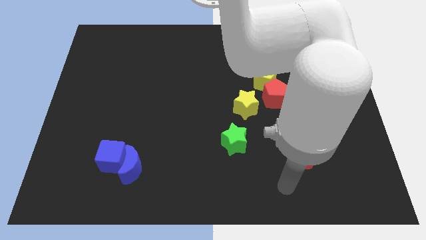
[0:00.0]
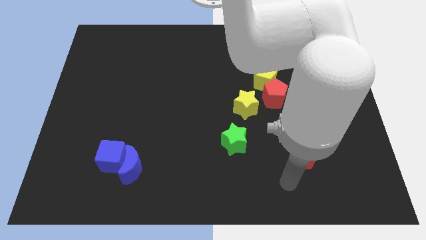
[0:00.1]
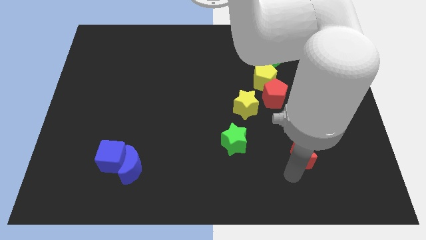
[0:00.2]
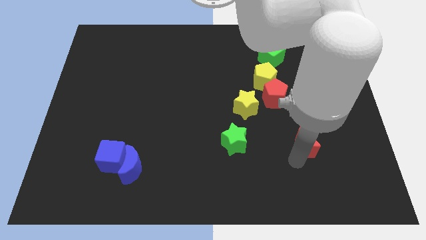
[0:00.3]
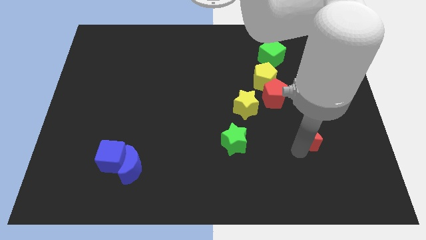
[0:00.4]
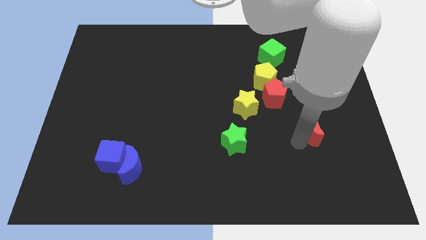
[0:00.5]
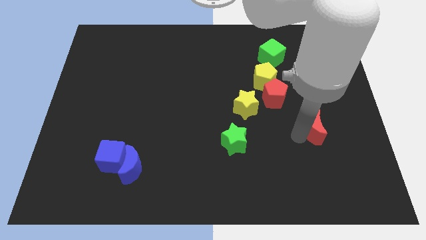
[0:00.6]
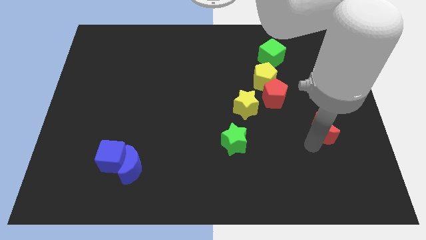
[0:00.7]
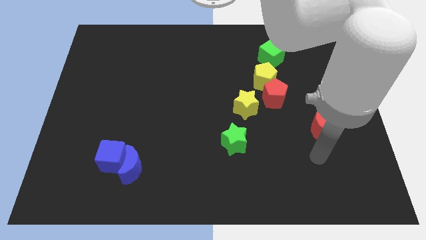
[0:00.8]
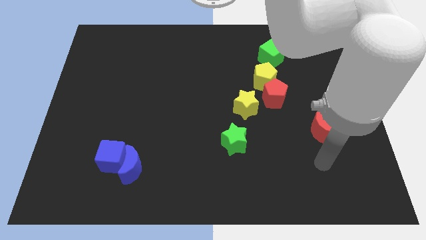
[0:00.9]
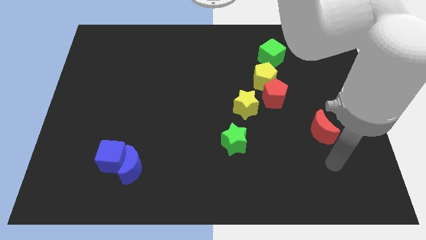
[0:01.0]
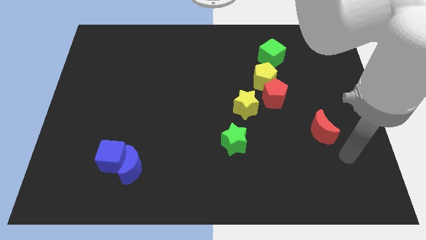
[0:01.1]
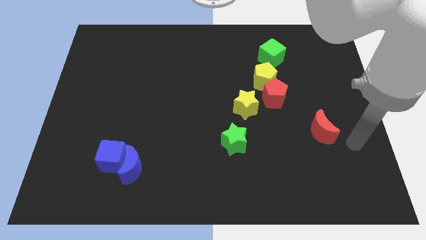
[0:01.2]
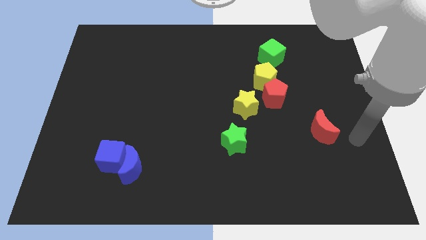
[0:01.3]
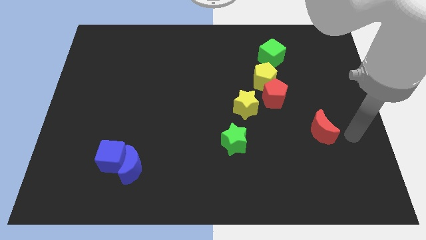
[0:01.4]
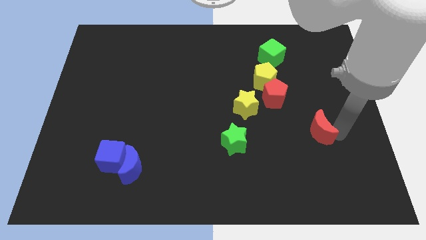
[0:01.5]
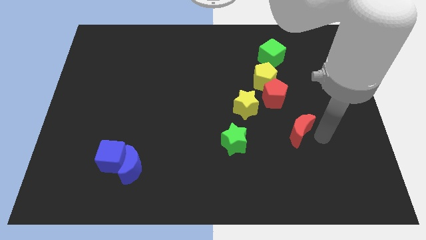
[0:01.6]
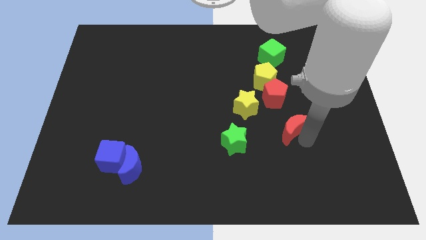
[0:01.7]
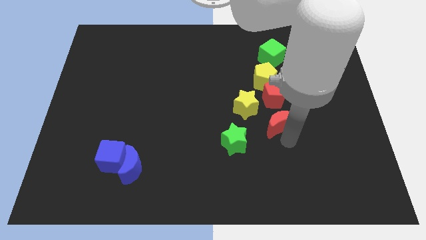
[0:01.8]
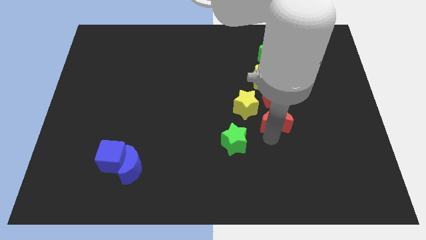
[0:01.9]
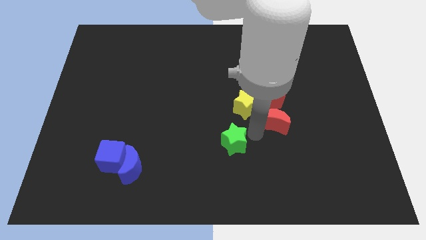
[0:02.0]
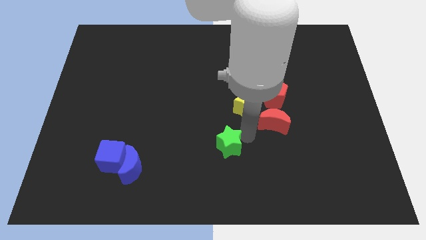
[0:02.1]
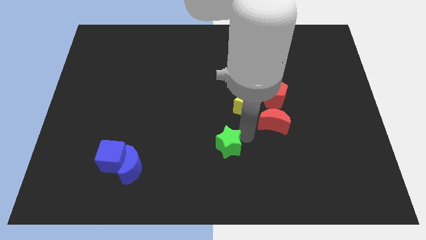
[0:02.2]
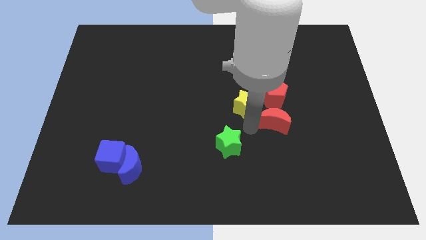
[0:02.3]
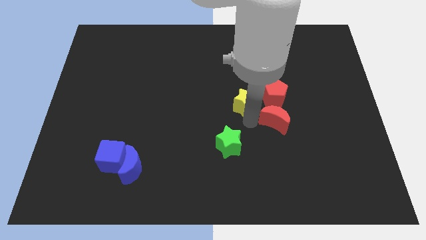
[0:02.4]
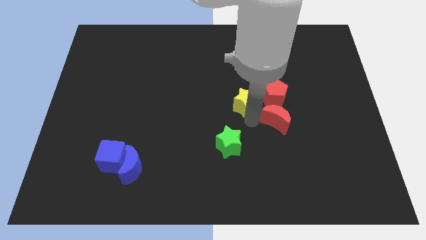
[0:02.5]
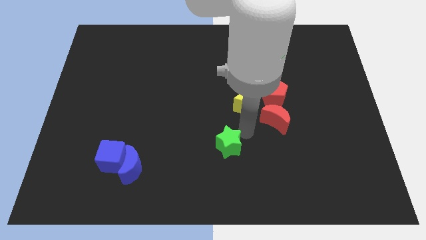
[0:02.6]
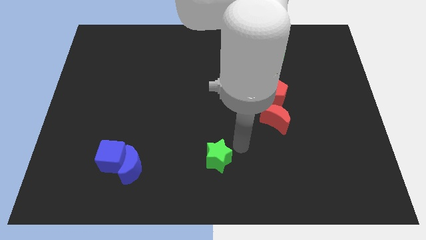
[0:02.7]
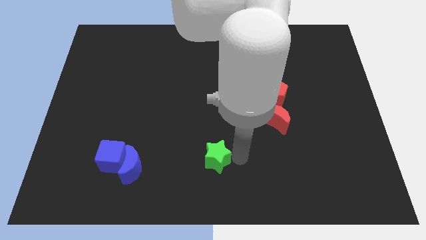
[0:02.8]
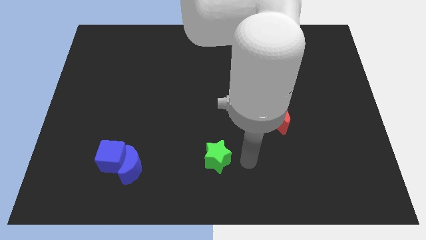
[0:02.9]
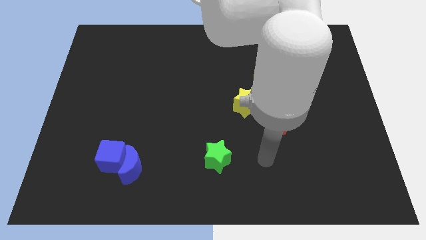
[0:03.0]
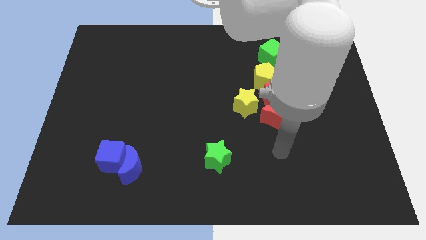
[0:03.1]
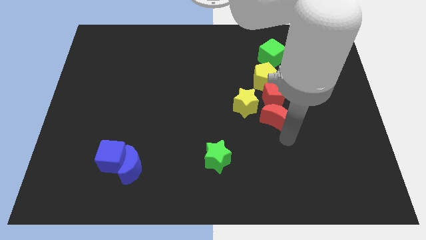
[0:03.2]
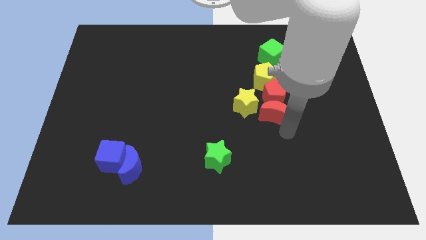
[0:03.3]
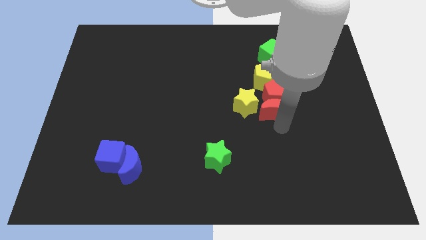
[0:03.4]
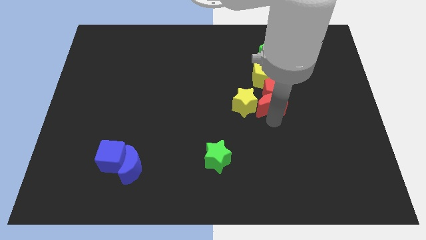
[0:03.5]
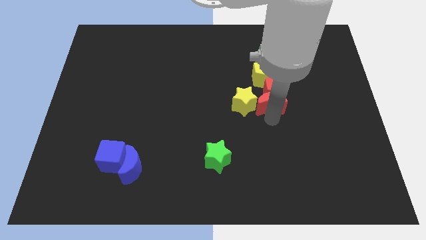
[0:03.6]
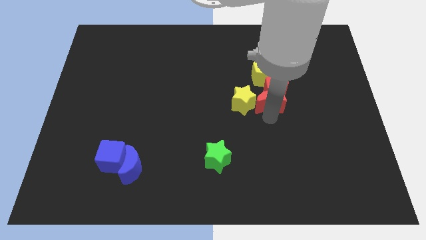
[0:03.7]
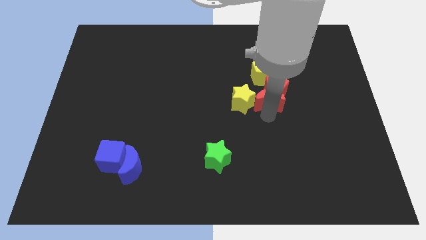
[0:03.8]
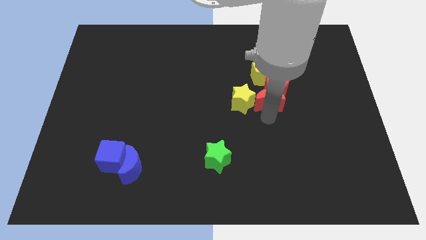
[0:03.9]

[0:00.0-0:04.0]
push red crescent towards up

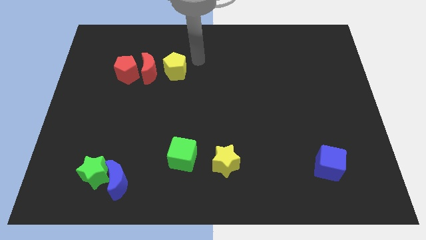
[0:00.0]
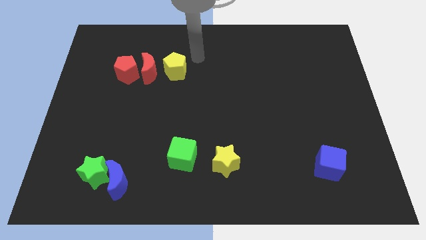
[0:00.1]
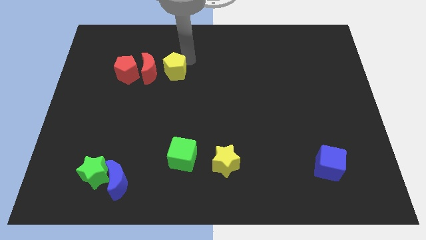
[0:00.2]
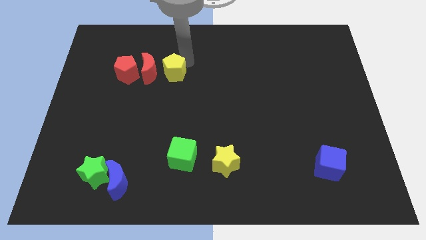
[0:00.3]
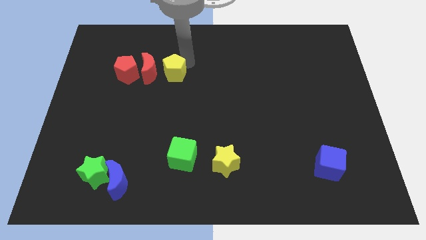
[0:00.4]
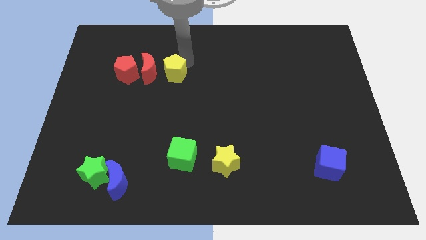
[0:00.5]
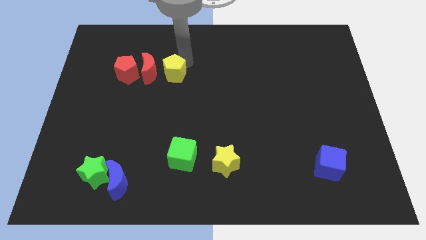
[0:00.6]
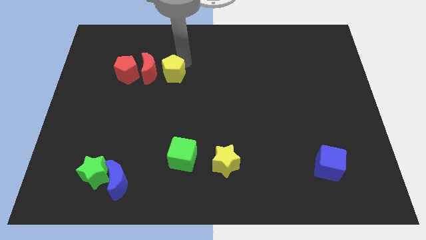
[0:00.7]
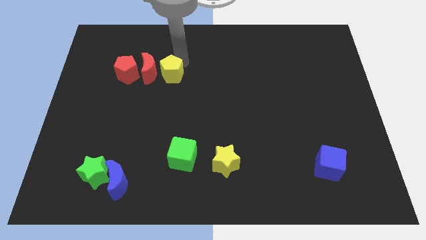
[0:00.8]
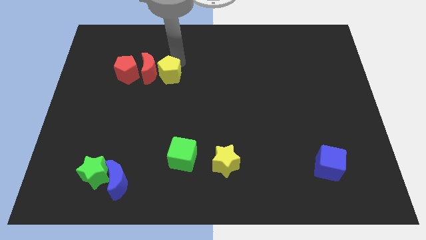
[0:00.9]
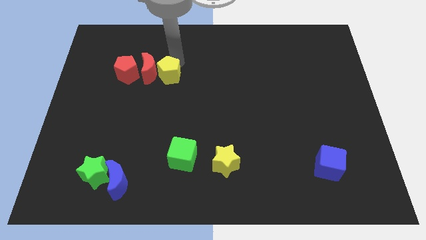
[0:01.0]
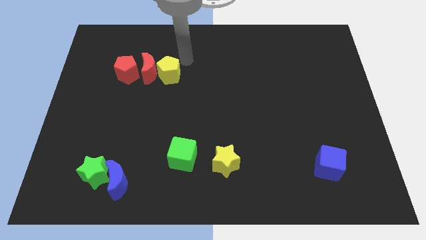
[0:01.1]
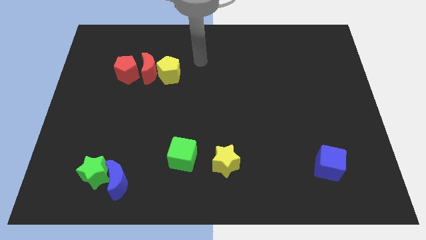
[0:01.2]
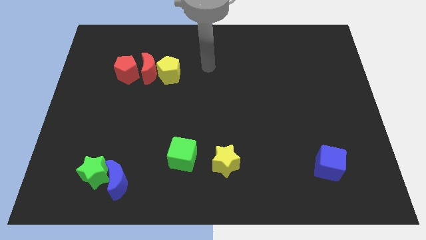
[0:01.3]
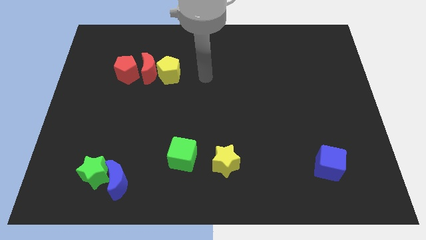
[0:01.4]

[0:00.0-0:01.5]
move the yellow pentagon close to the red crescent

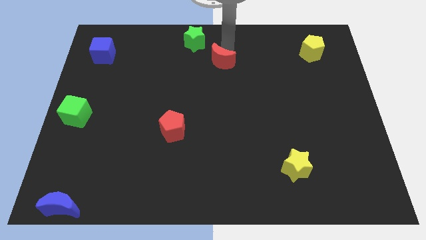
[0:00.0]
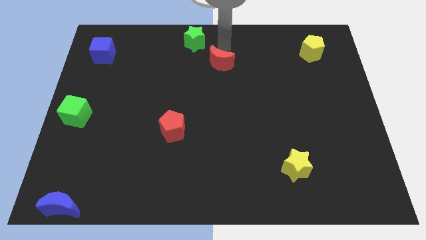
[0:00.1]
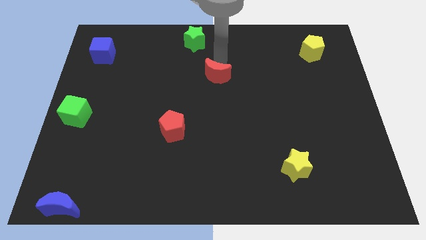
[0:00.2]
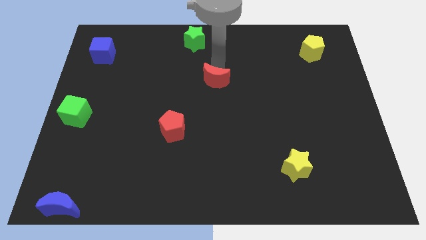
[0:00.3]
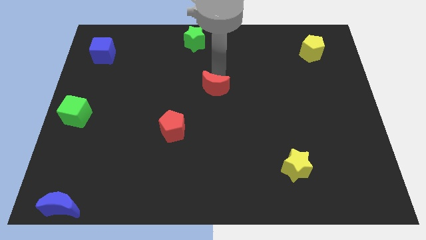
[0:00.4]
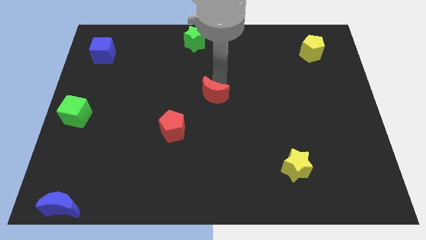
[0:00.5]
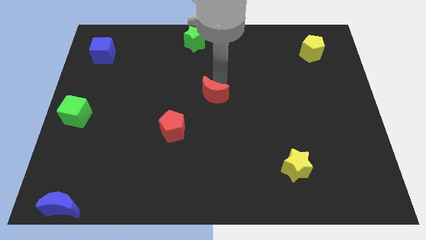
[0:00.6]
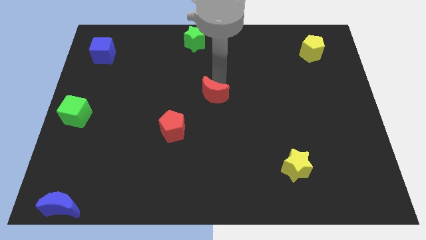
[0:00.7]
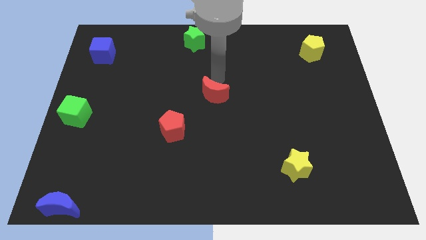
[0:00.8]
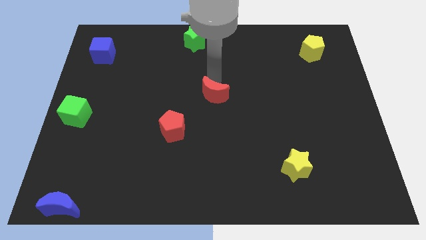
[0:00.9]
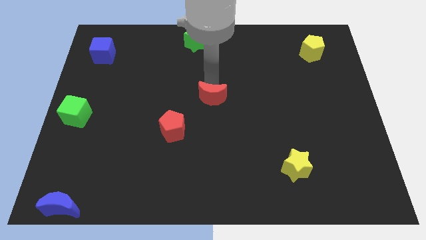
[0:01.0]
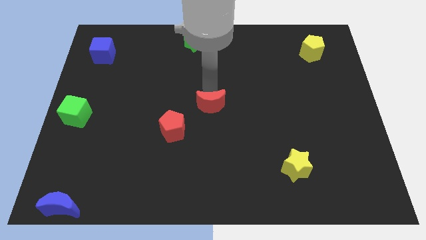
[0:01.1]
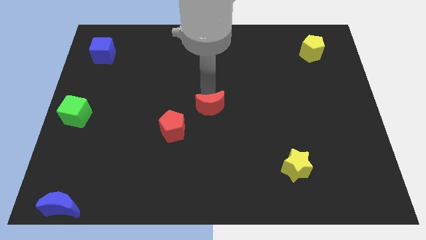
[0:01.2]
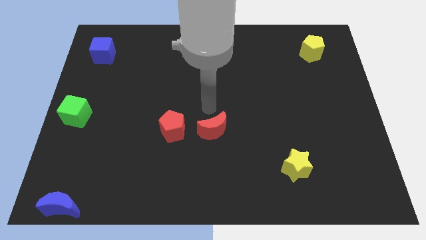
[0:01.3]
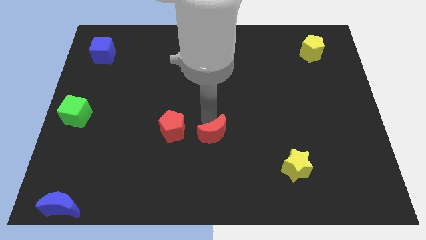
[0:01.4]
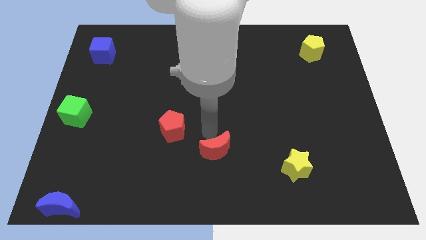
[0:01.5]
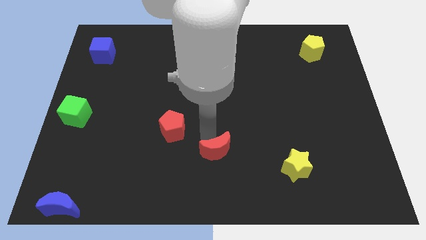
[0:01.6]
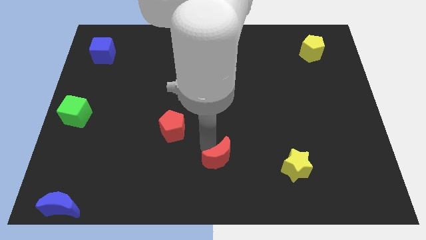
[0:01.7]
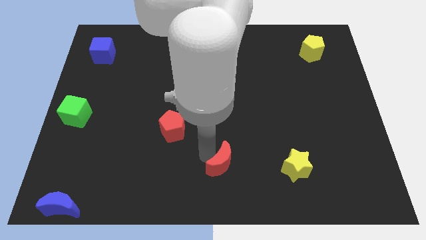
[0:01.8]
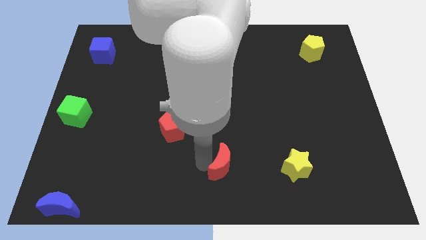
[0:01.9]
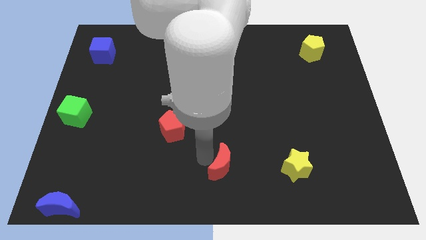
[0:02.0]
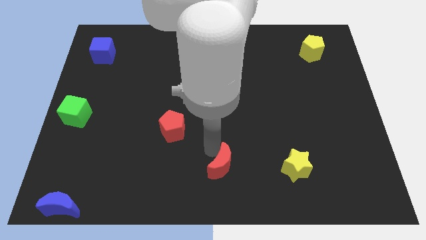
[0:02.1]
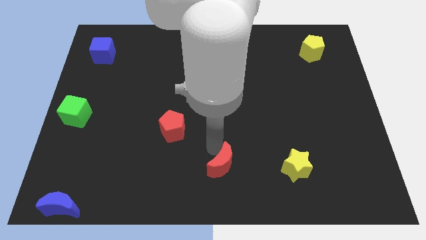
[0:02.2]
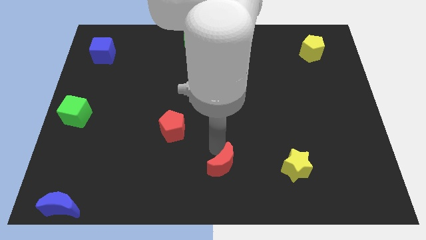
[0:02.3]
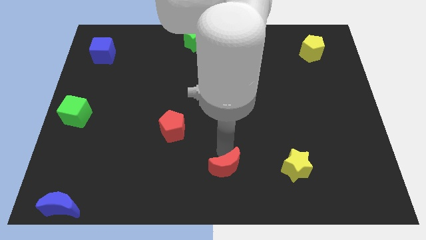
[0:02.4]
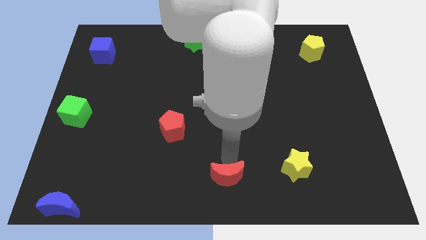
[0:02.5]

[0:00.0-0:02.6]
push the red crescent to the left side of the yellow star

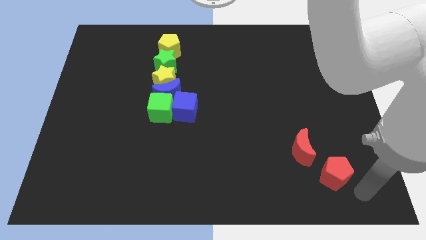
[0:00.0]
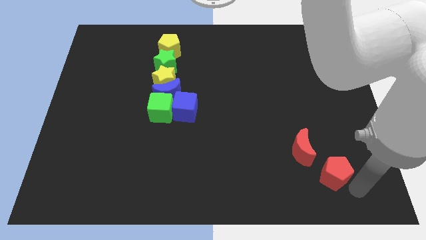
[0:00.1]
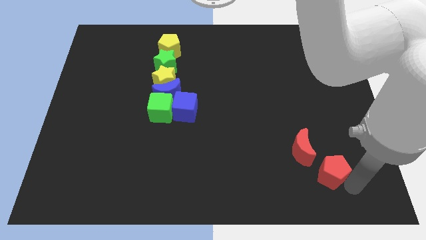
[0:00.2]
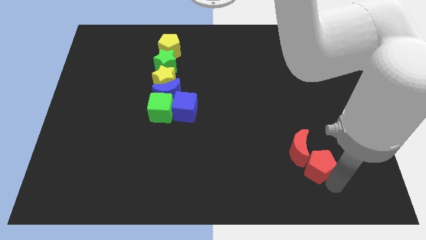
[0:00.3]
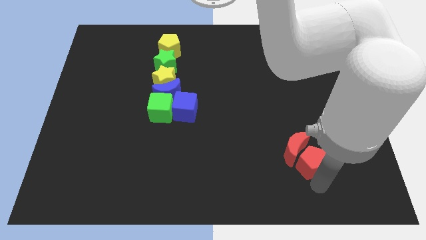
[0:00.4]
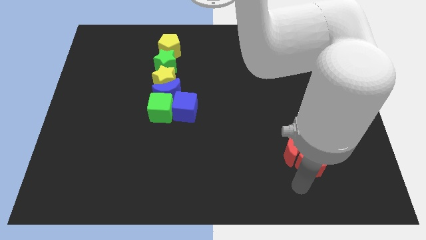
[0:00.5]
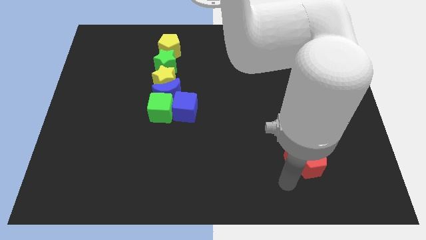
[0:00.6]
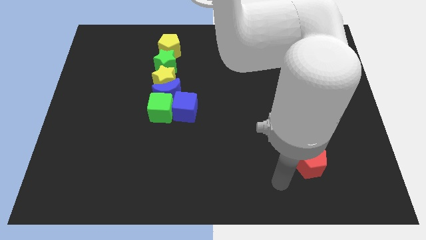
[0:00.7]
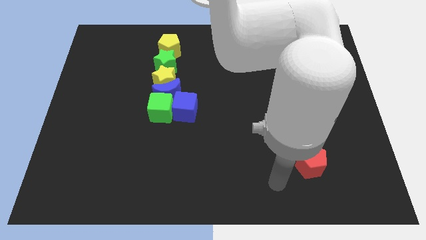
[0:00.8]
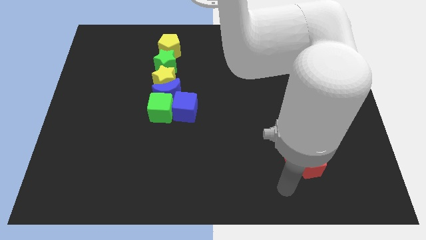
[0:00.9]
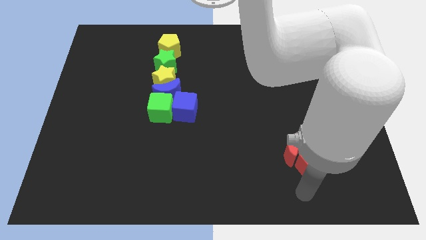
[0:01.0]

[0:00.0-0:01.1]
move red pentagon into red moon
